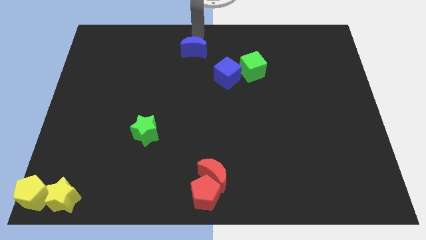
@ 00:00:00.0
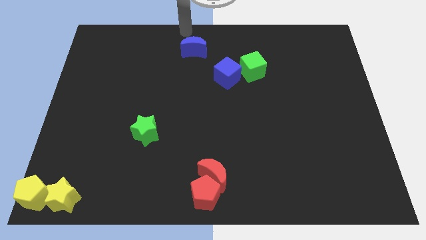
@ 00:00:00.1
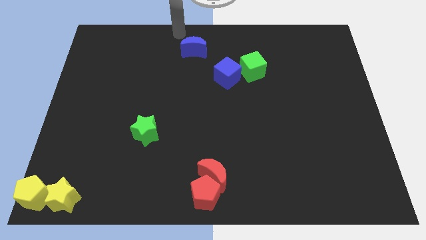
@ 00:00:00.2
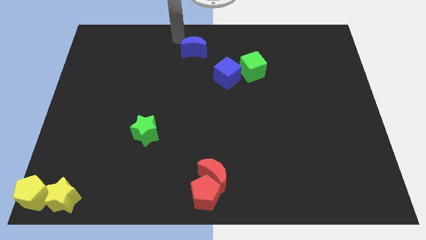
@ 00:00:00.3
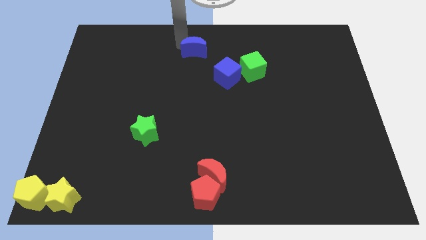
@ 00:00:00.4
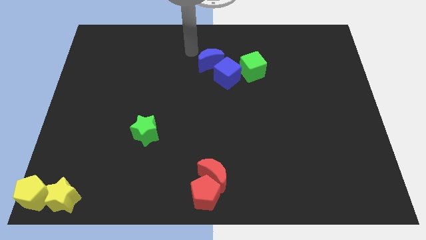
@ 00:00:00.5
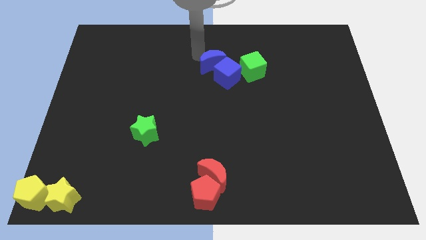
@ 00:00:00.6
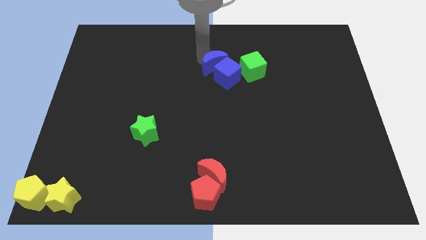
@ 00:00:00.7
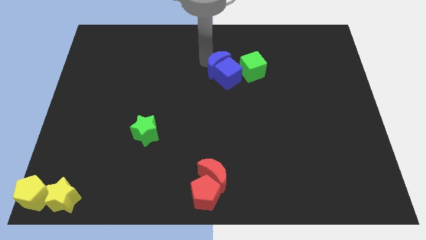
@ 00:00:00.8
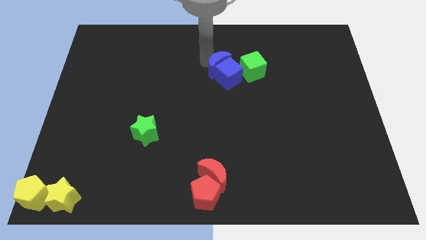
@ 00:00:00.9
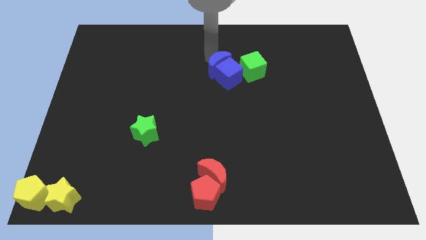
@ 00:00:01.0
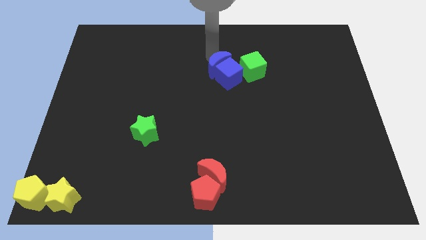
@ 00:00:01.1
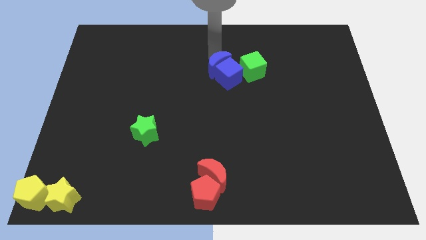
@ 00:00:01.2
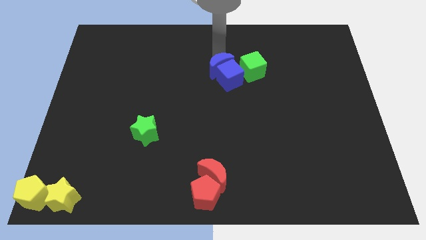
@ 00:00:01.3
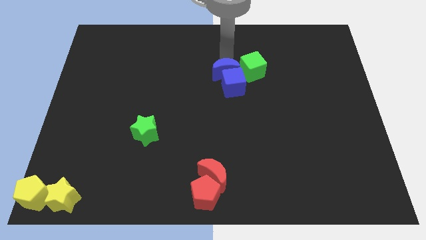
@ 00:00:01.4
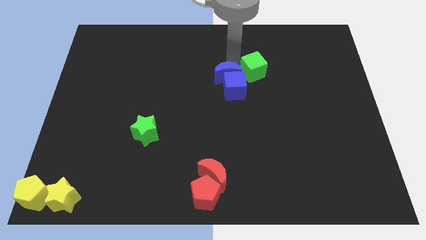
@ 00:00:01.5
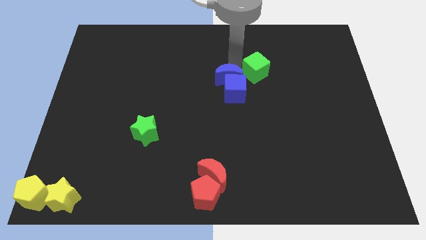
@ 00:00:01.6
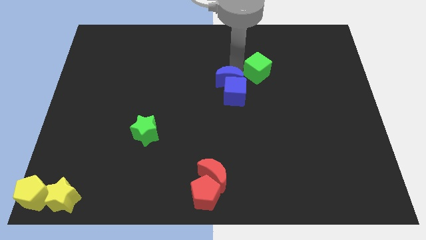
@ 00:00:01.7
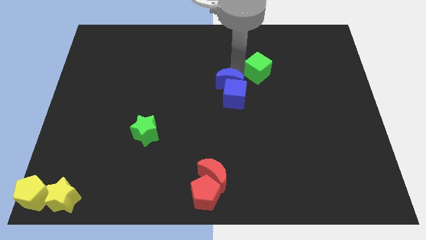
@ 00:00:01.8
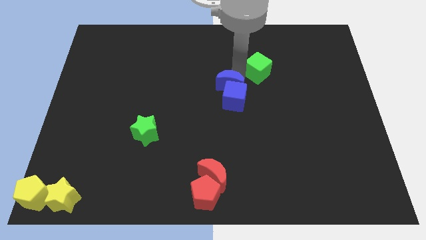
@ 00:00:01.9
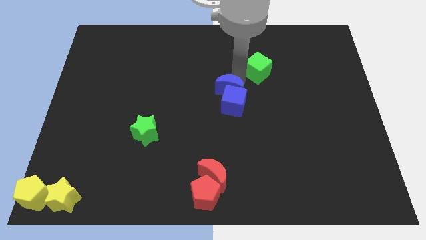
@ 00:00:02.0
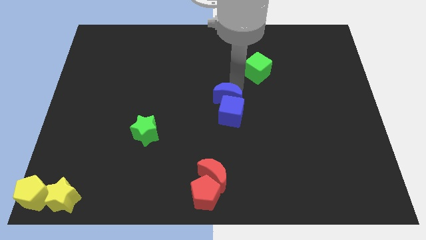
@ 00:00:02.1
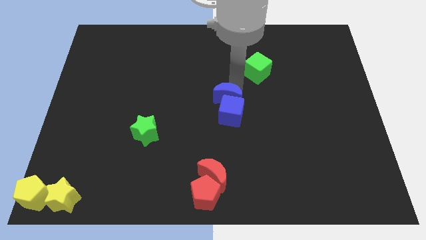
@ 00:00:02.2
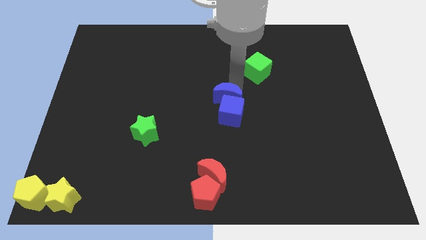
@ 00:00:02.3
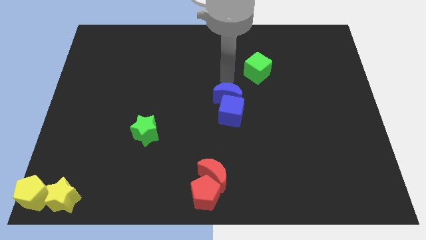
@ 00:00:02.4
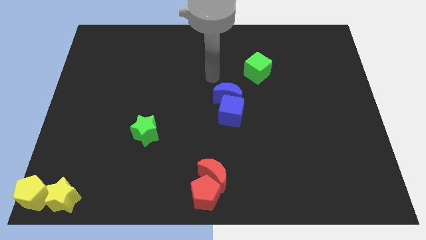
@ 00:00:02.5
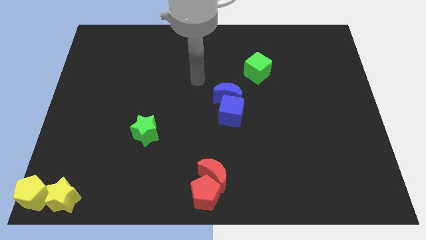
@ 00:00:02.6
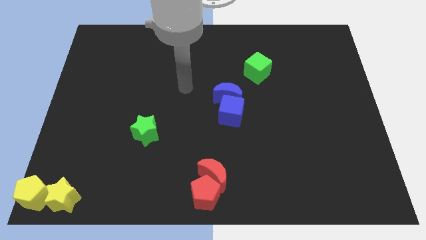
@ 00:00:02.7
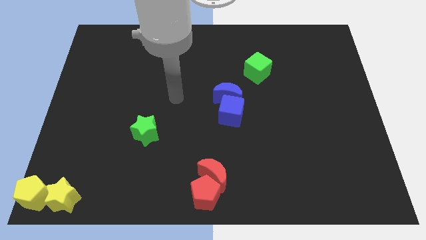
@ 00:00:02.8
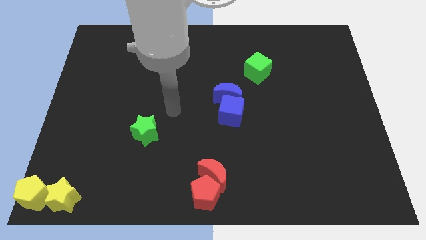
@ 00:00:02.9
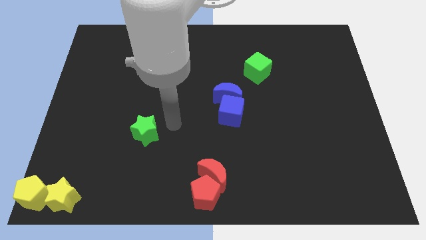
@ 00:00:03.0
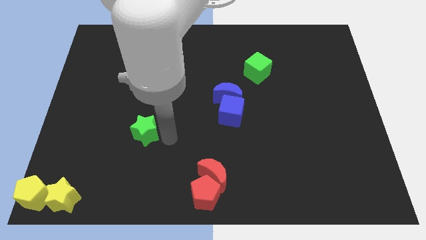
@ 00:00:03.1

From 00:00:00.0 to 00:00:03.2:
push the blue blocks towards the center of the board

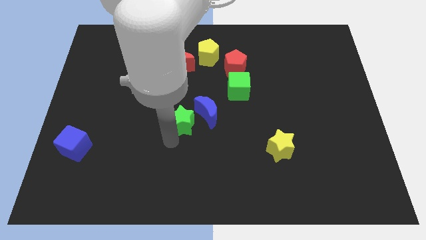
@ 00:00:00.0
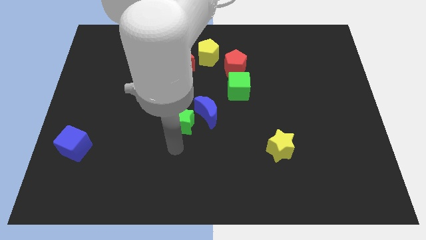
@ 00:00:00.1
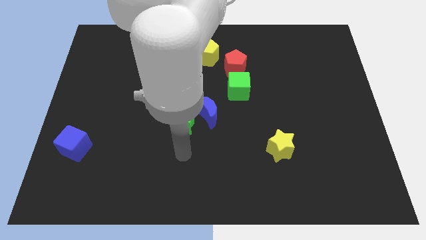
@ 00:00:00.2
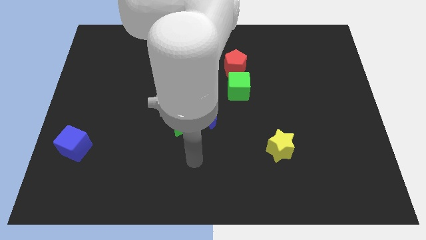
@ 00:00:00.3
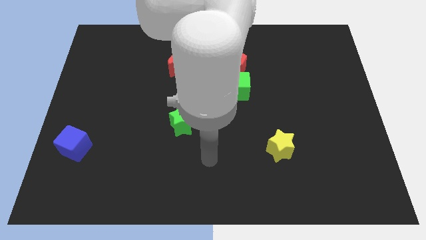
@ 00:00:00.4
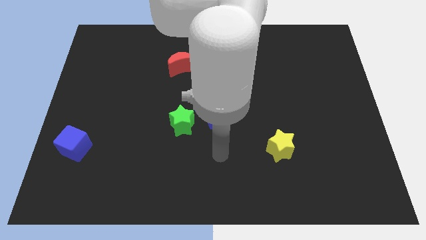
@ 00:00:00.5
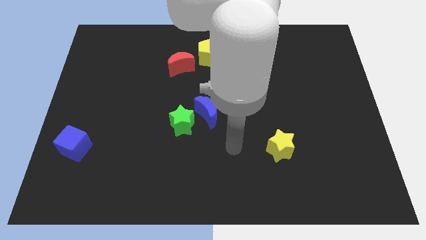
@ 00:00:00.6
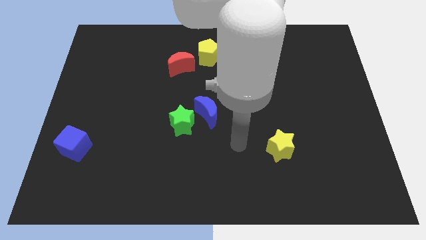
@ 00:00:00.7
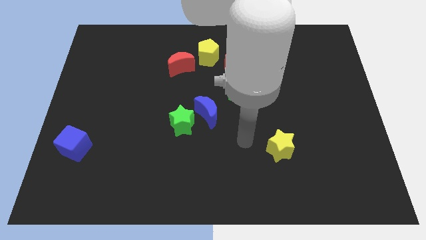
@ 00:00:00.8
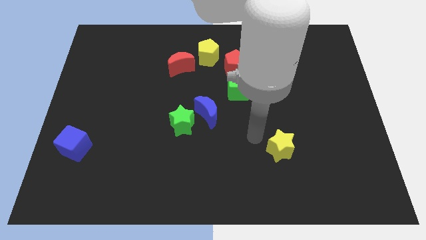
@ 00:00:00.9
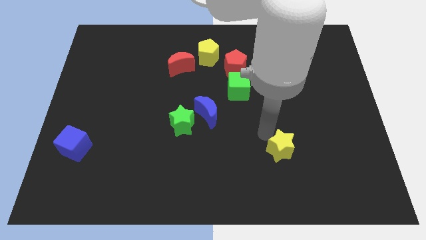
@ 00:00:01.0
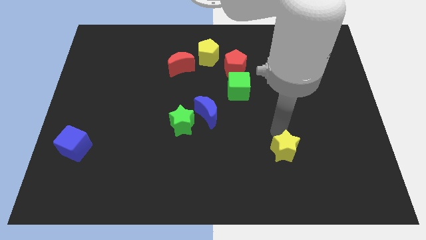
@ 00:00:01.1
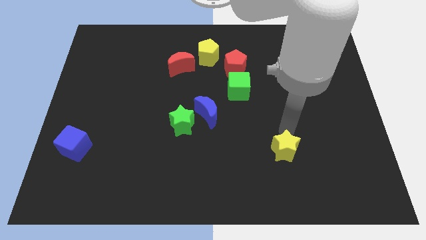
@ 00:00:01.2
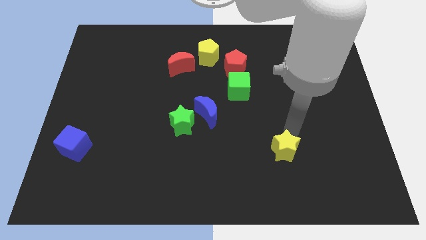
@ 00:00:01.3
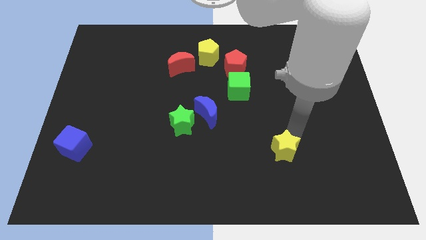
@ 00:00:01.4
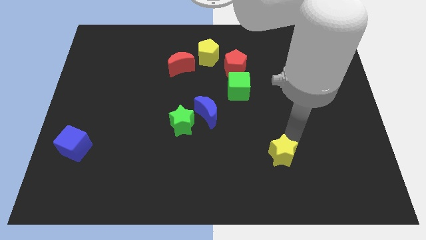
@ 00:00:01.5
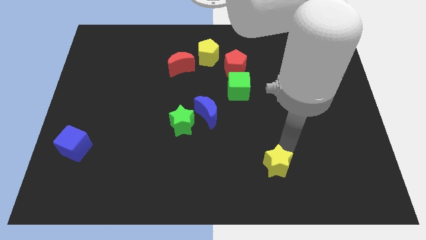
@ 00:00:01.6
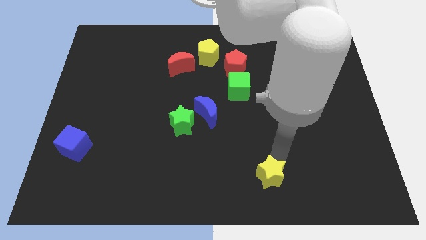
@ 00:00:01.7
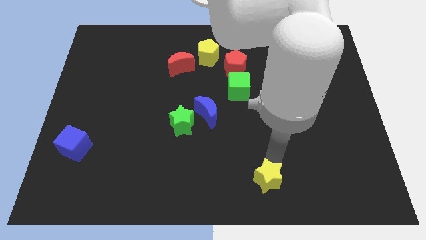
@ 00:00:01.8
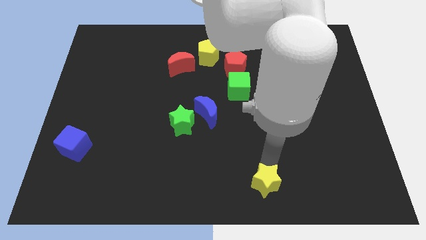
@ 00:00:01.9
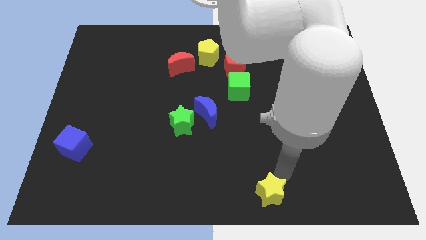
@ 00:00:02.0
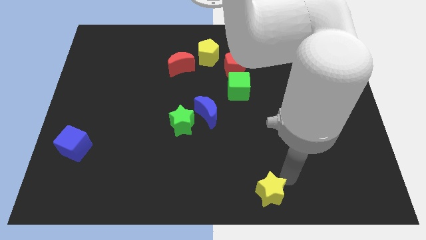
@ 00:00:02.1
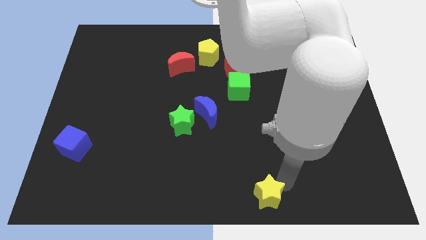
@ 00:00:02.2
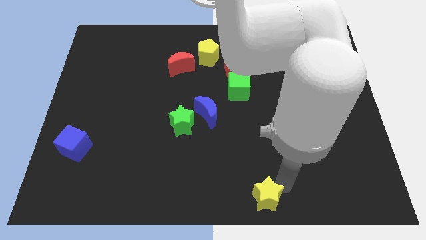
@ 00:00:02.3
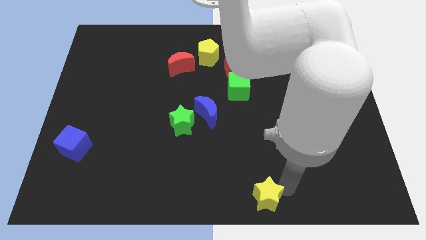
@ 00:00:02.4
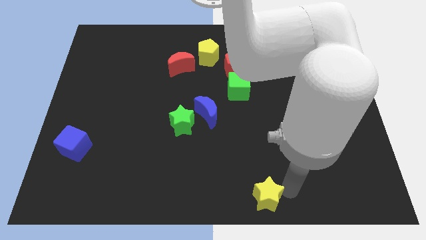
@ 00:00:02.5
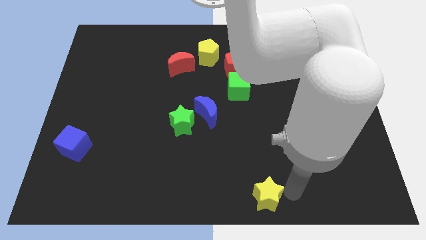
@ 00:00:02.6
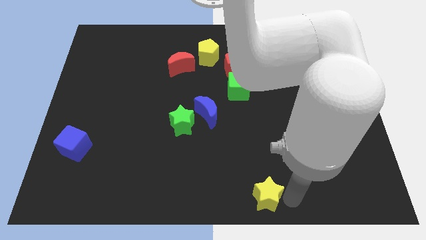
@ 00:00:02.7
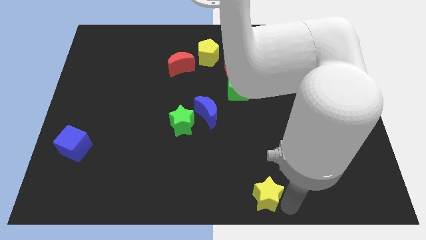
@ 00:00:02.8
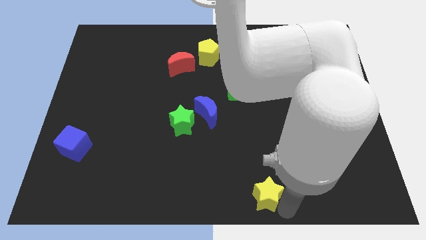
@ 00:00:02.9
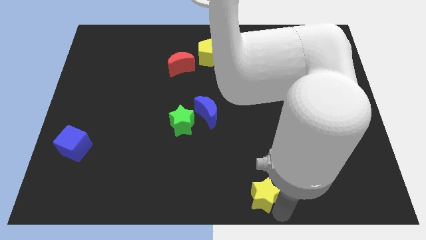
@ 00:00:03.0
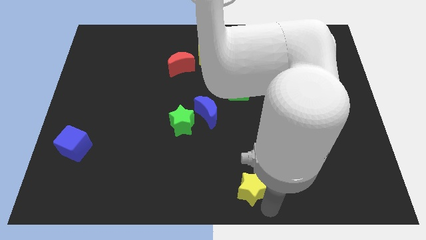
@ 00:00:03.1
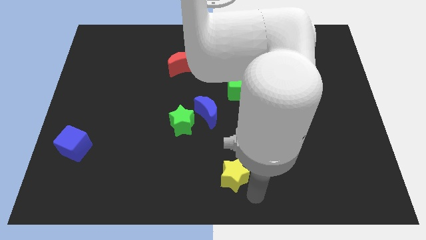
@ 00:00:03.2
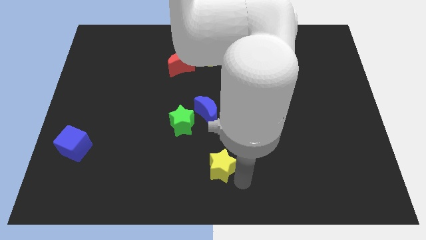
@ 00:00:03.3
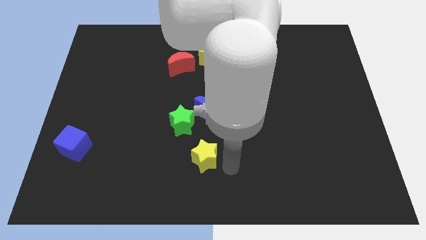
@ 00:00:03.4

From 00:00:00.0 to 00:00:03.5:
place the yellow star at the bottom center of the board

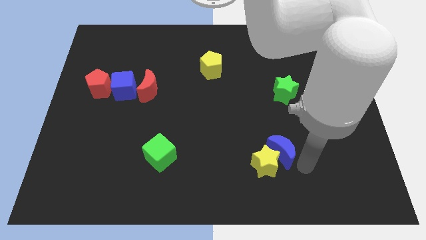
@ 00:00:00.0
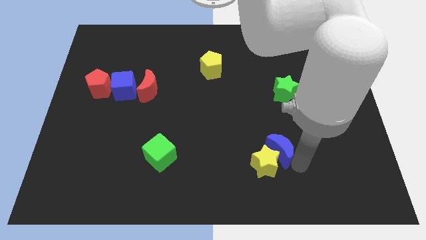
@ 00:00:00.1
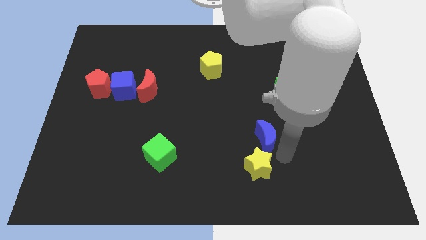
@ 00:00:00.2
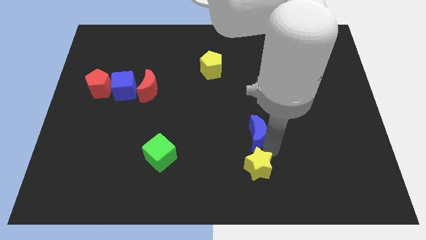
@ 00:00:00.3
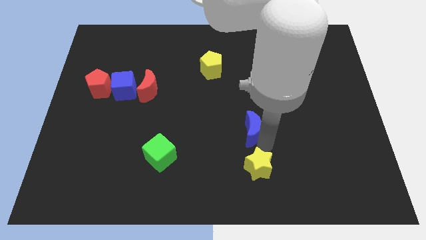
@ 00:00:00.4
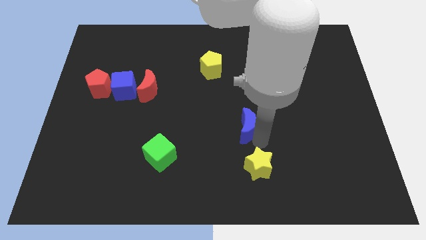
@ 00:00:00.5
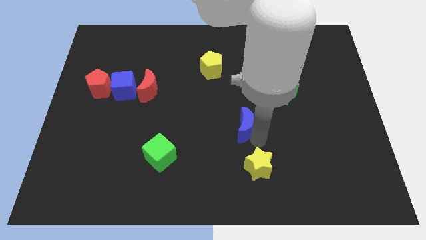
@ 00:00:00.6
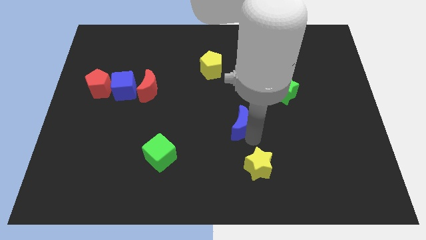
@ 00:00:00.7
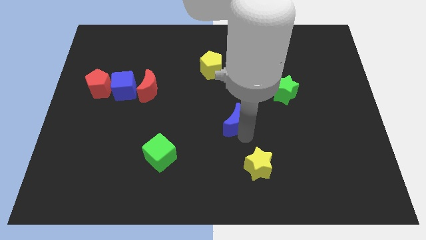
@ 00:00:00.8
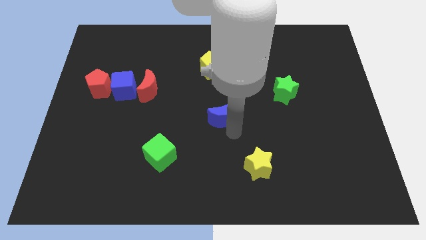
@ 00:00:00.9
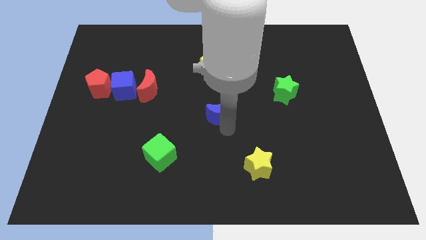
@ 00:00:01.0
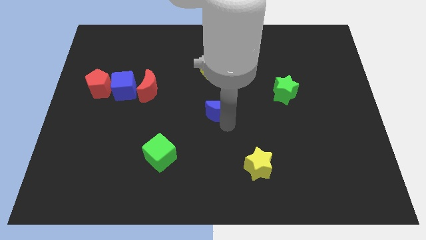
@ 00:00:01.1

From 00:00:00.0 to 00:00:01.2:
move the blue moon to the center

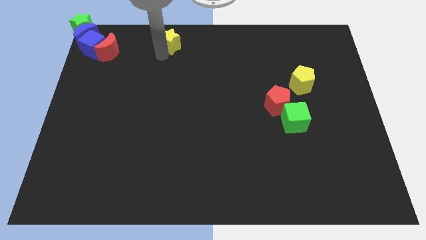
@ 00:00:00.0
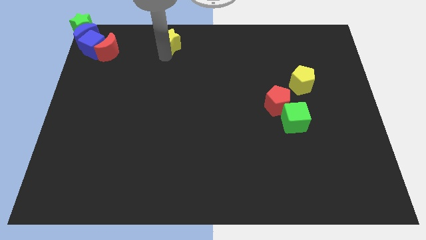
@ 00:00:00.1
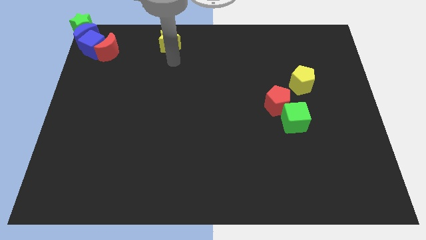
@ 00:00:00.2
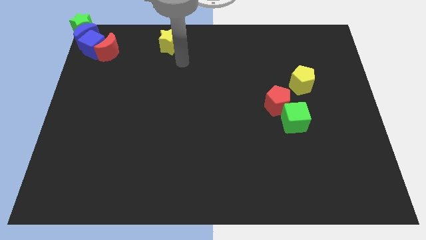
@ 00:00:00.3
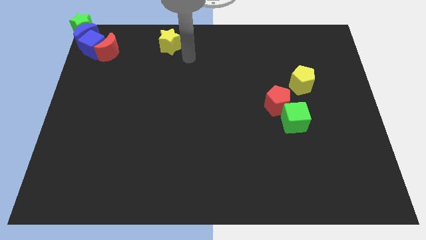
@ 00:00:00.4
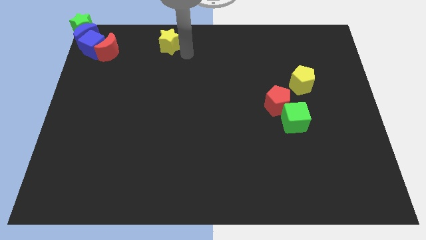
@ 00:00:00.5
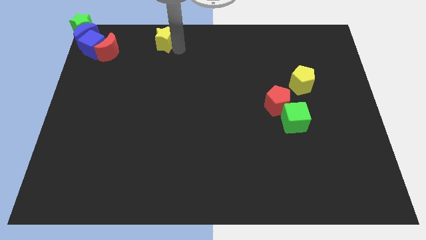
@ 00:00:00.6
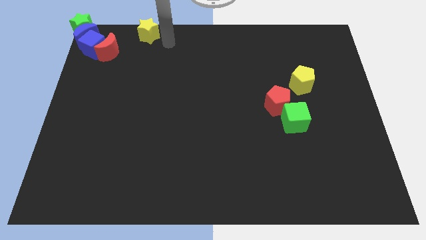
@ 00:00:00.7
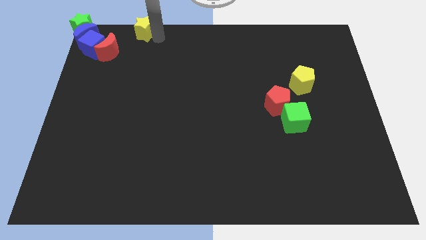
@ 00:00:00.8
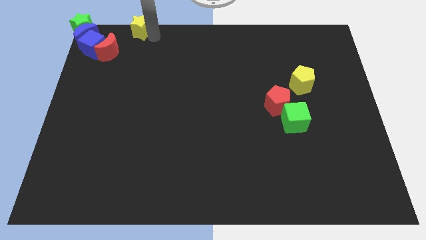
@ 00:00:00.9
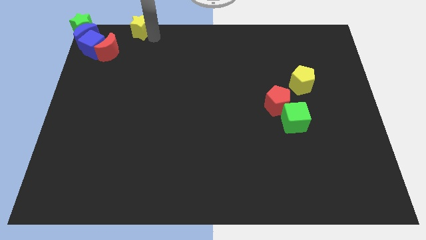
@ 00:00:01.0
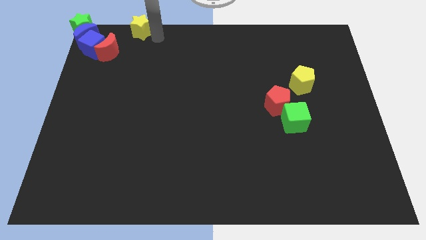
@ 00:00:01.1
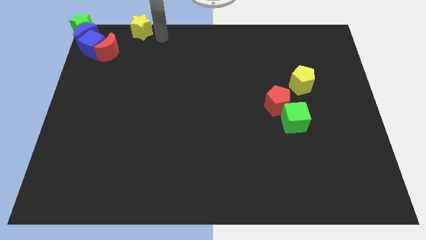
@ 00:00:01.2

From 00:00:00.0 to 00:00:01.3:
push the yellow star to the left side of the board
